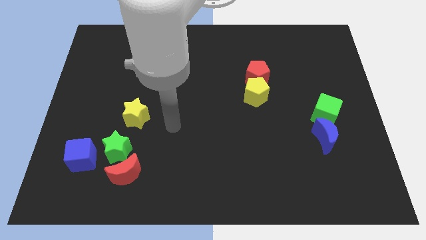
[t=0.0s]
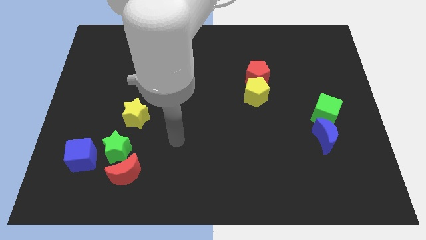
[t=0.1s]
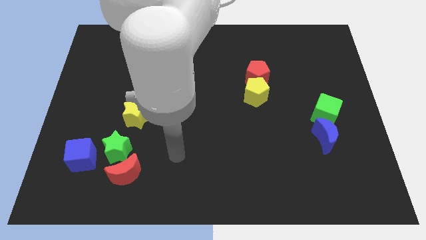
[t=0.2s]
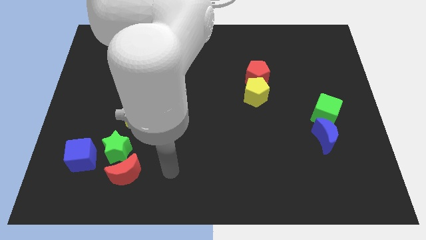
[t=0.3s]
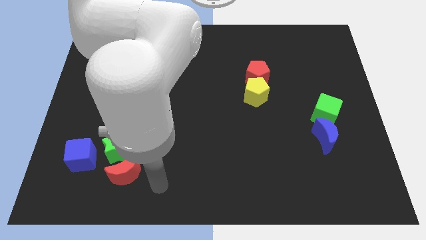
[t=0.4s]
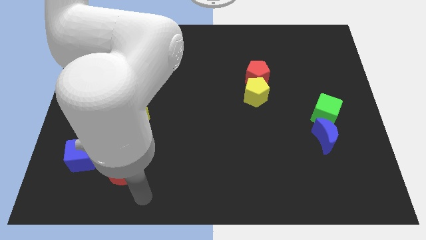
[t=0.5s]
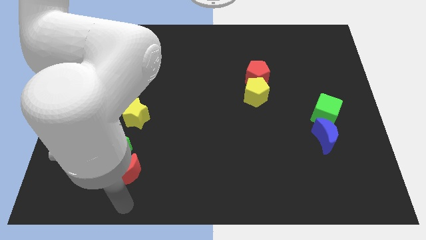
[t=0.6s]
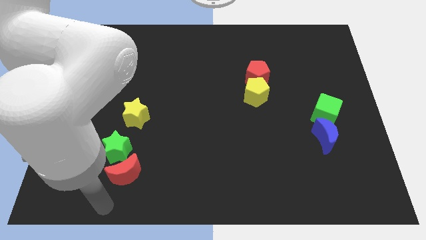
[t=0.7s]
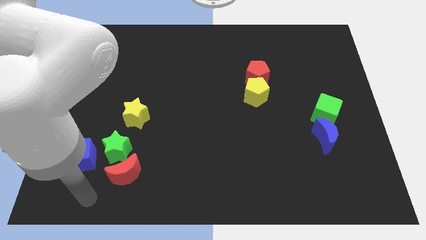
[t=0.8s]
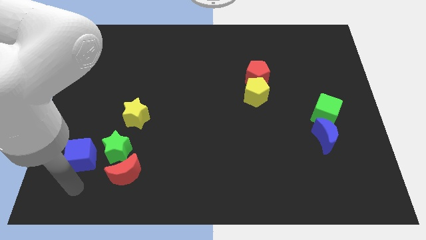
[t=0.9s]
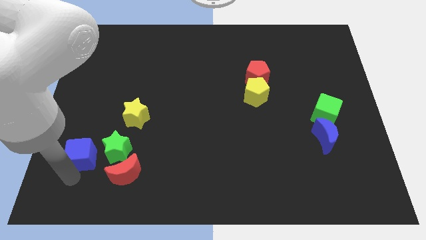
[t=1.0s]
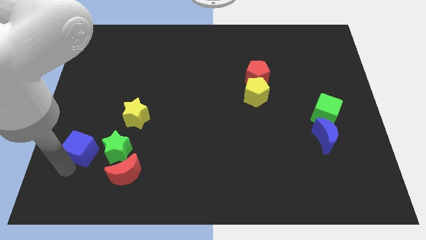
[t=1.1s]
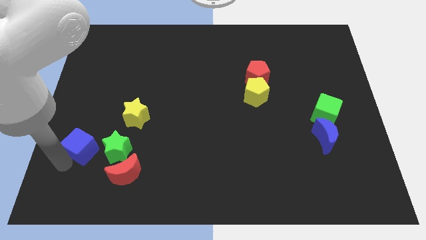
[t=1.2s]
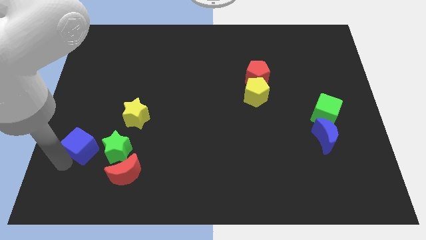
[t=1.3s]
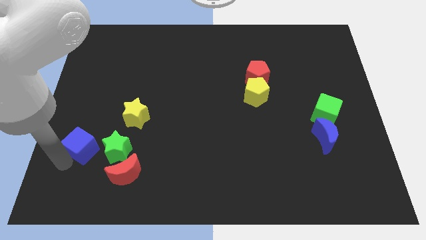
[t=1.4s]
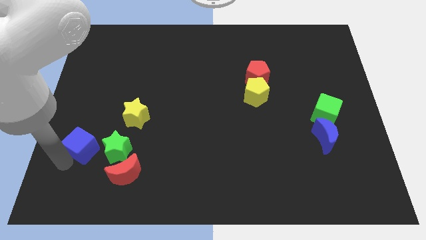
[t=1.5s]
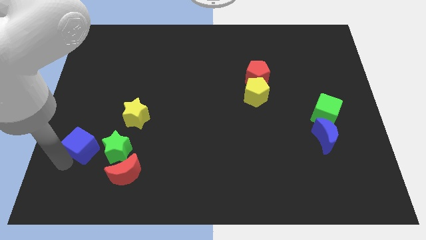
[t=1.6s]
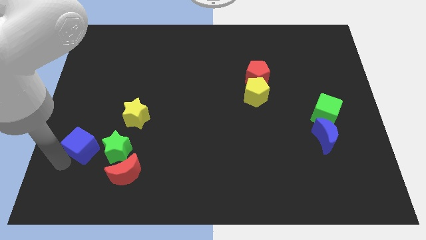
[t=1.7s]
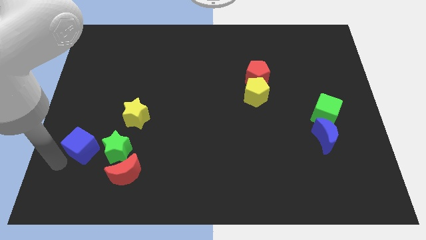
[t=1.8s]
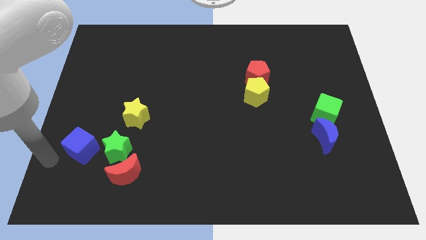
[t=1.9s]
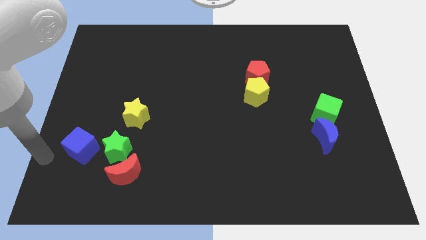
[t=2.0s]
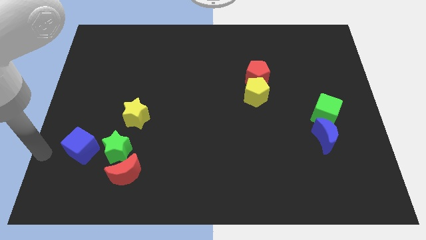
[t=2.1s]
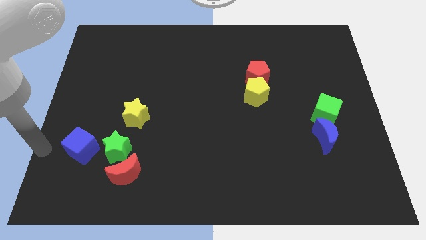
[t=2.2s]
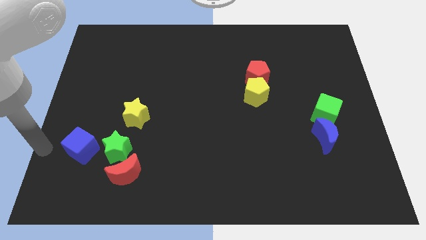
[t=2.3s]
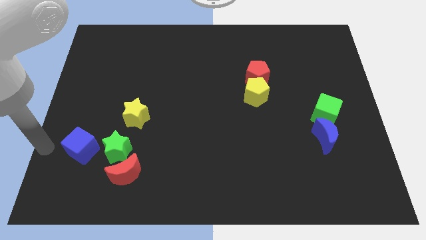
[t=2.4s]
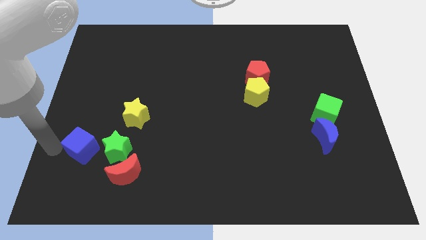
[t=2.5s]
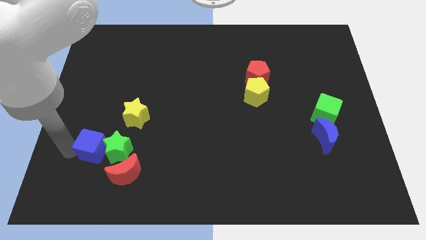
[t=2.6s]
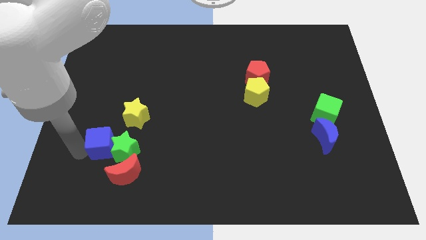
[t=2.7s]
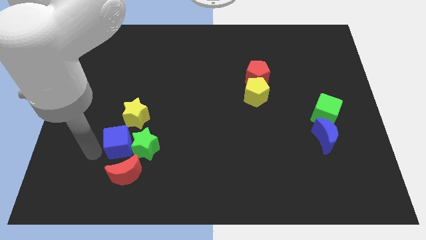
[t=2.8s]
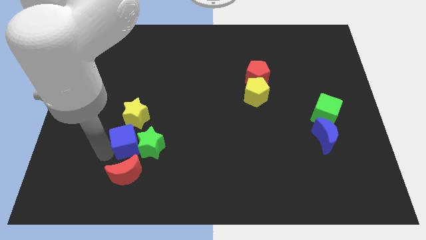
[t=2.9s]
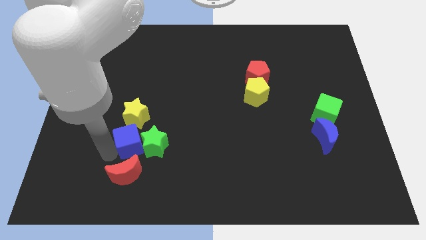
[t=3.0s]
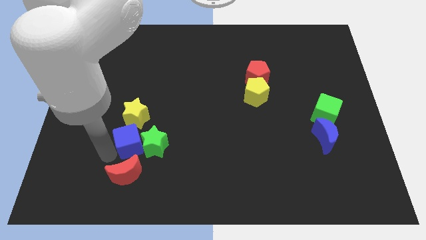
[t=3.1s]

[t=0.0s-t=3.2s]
push the blue cube into the green star

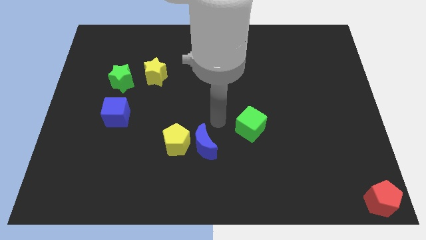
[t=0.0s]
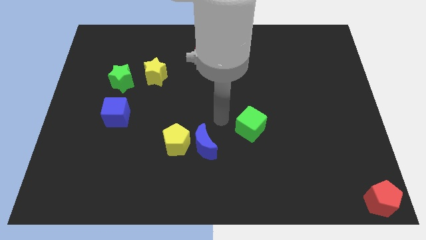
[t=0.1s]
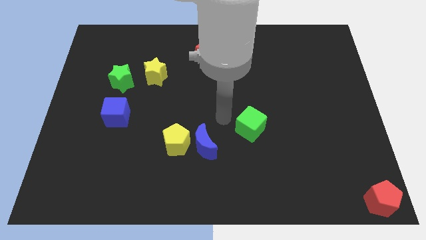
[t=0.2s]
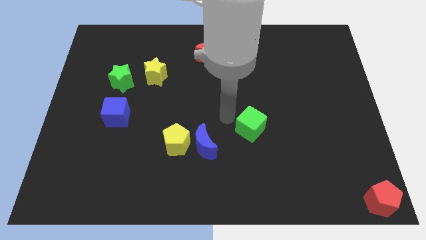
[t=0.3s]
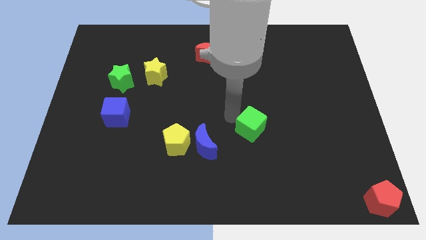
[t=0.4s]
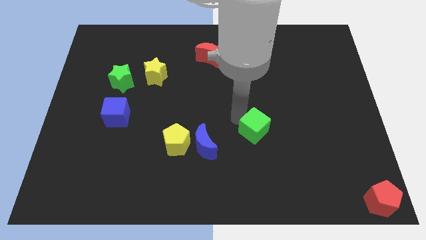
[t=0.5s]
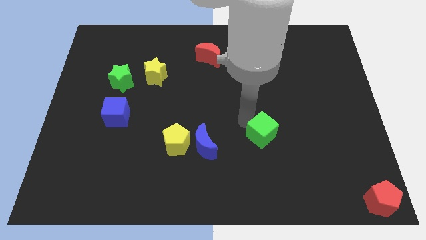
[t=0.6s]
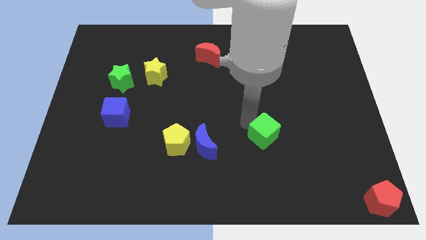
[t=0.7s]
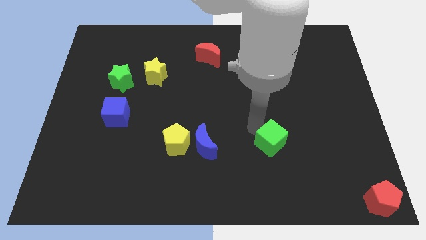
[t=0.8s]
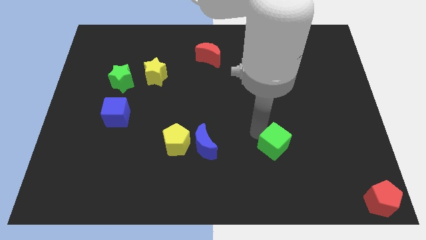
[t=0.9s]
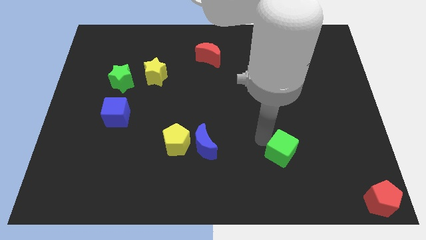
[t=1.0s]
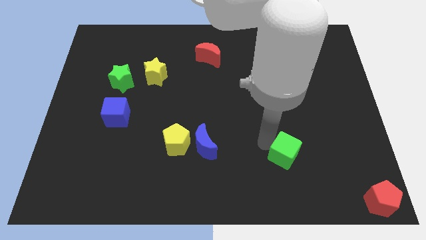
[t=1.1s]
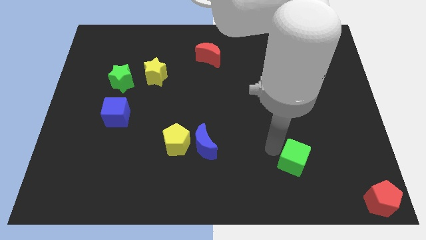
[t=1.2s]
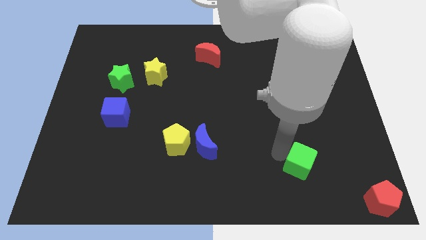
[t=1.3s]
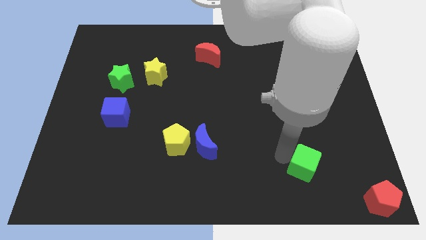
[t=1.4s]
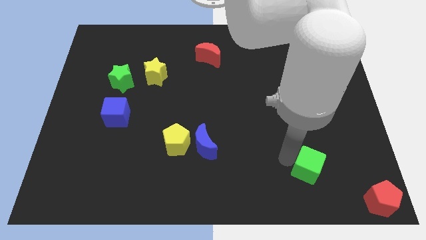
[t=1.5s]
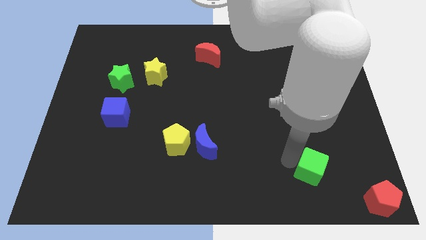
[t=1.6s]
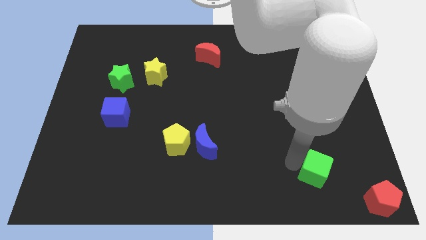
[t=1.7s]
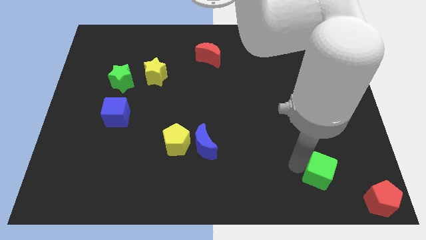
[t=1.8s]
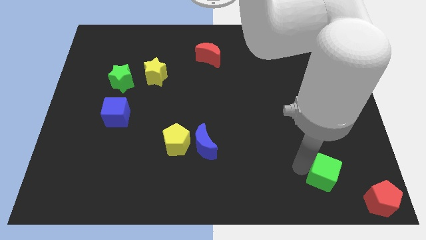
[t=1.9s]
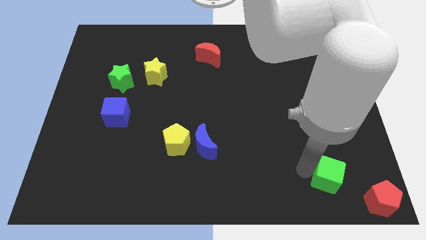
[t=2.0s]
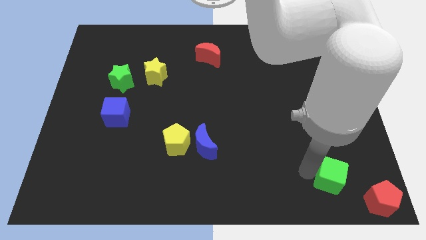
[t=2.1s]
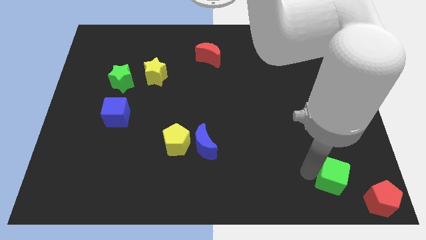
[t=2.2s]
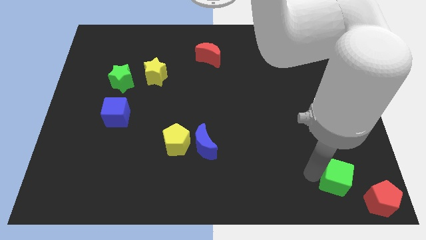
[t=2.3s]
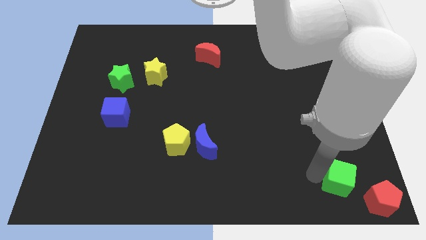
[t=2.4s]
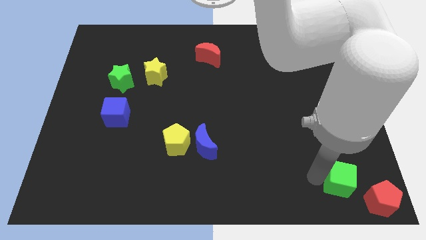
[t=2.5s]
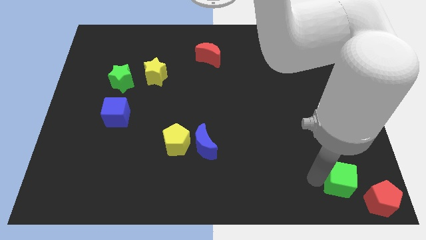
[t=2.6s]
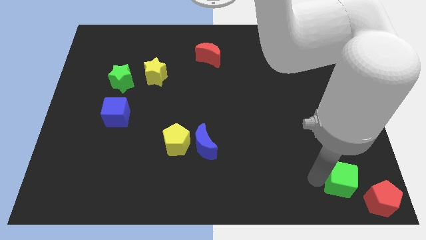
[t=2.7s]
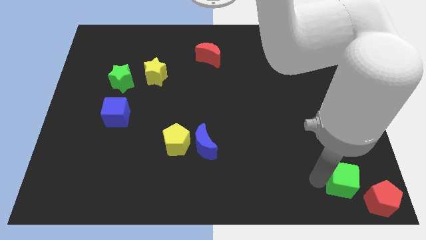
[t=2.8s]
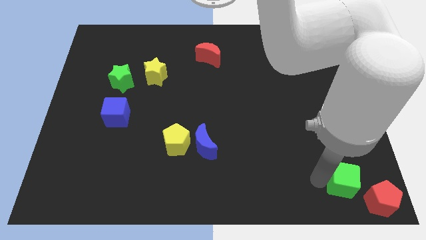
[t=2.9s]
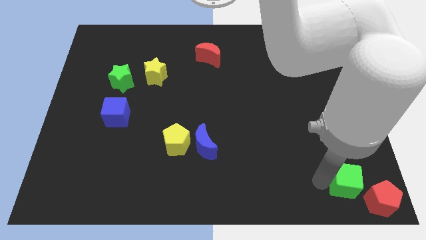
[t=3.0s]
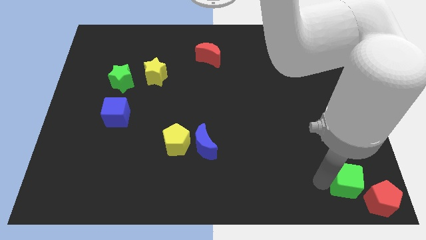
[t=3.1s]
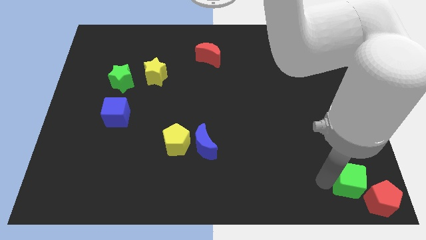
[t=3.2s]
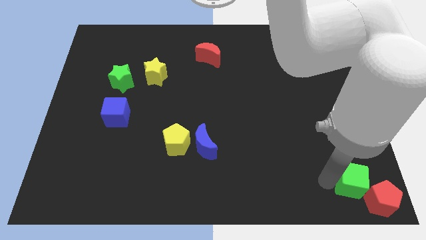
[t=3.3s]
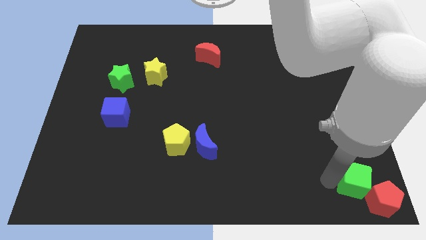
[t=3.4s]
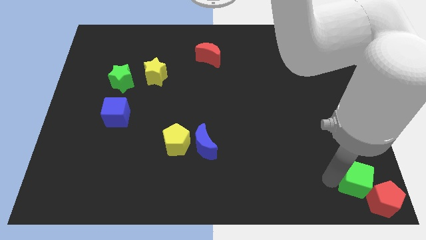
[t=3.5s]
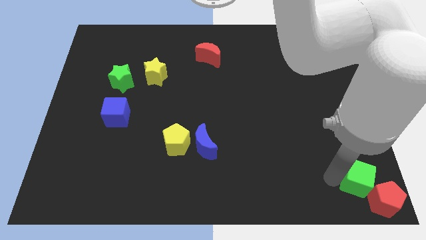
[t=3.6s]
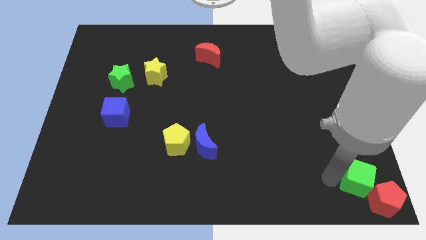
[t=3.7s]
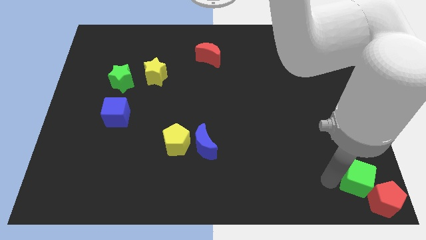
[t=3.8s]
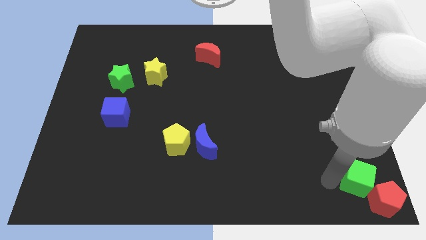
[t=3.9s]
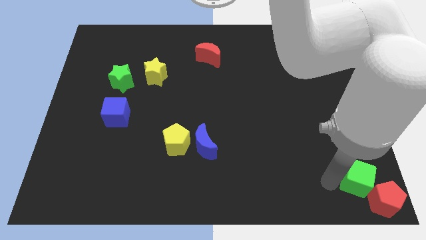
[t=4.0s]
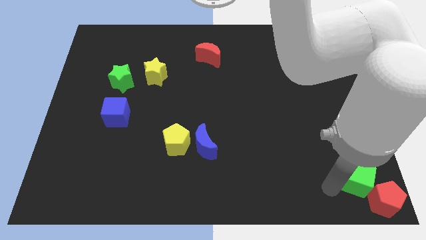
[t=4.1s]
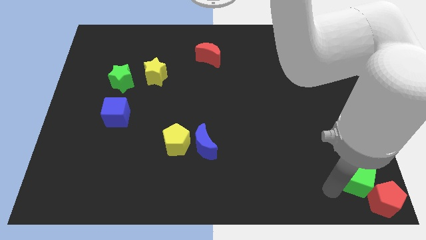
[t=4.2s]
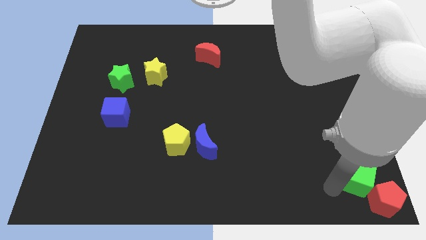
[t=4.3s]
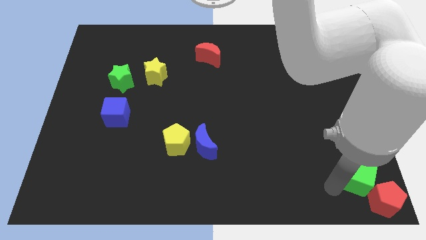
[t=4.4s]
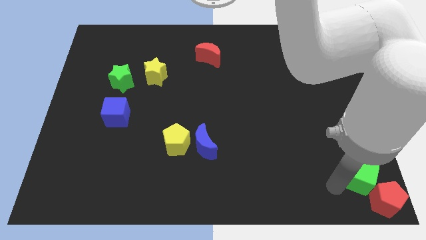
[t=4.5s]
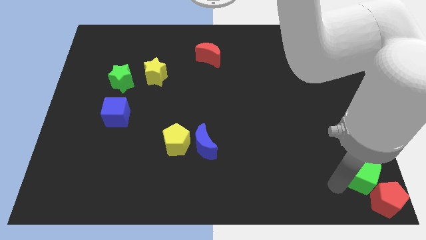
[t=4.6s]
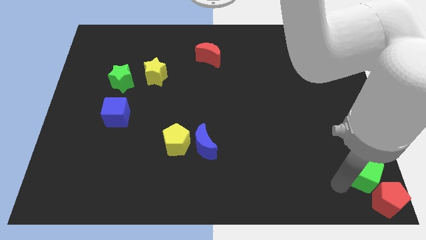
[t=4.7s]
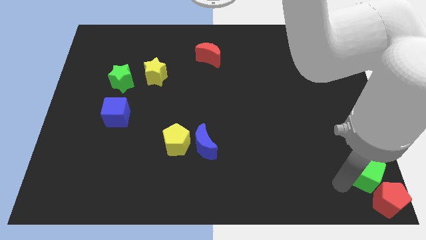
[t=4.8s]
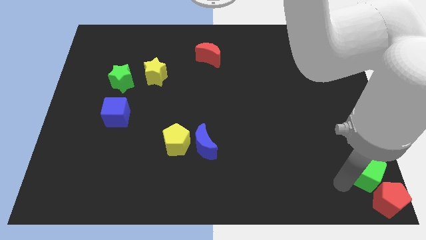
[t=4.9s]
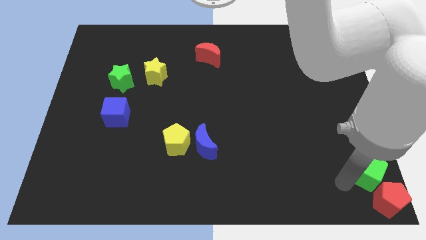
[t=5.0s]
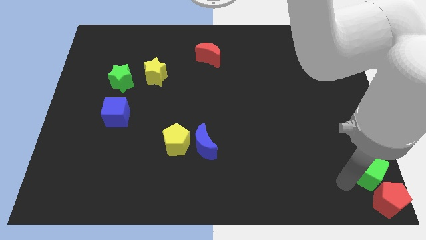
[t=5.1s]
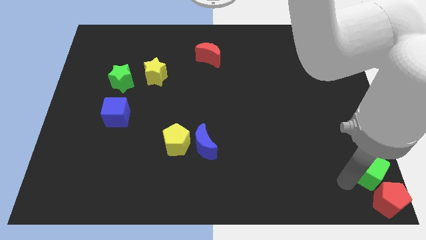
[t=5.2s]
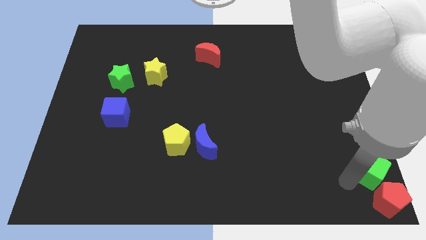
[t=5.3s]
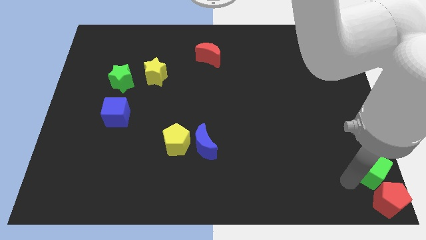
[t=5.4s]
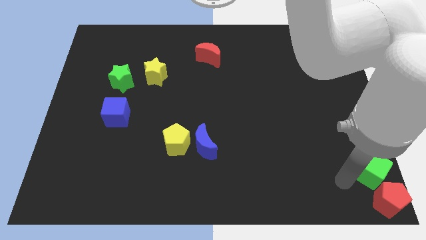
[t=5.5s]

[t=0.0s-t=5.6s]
move the green cube towards the right bottom corner of the board

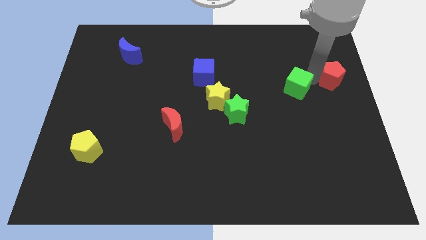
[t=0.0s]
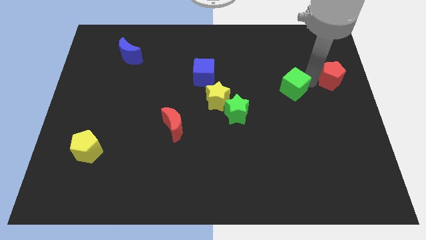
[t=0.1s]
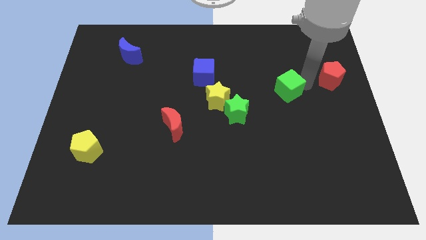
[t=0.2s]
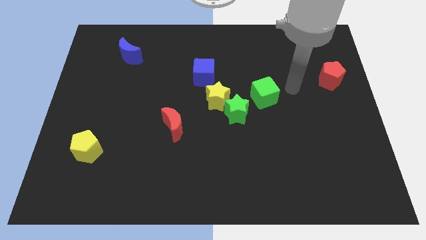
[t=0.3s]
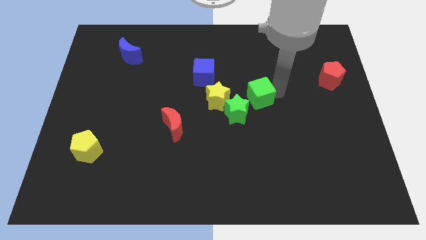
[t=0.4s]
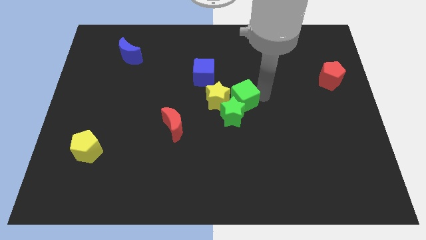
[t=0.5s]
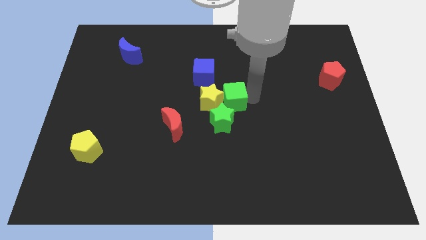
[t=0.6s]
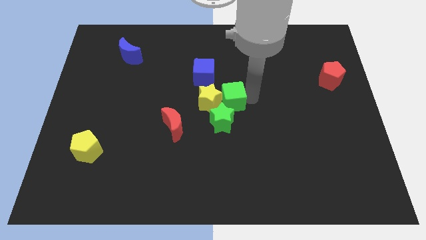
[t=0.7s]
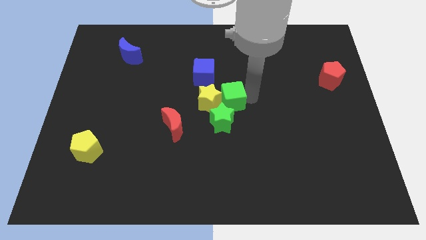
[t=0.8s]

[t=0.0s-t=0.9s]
place the green cube right to the yellow star
